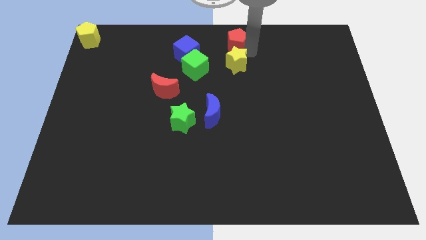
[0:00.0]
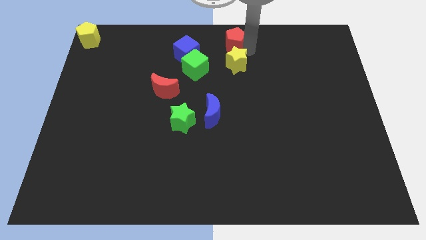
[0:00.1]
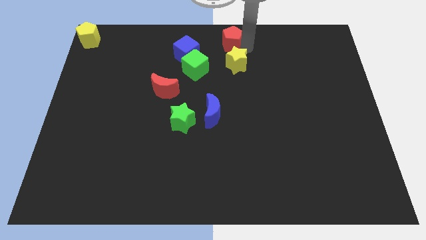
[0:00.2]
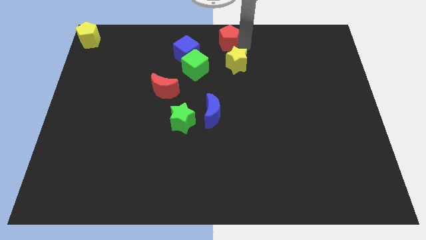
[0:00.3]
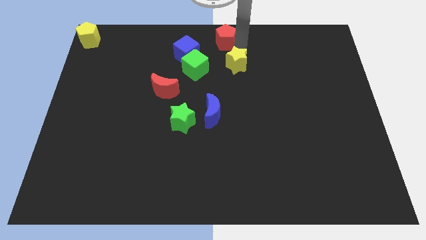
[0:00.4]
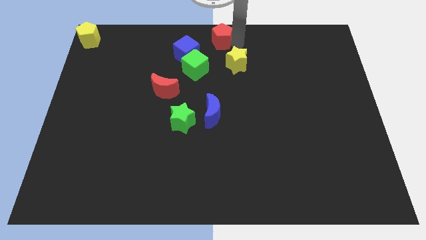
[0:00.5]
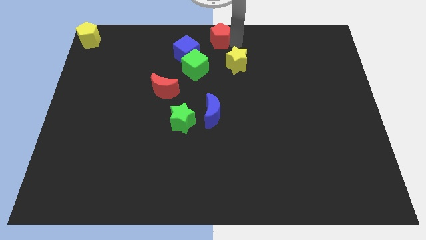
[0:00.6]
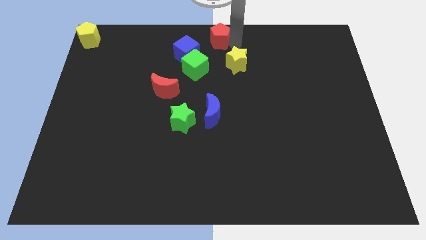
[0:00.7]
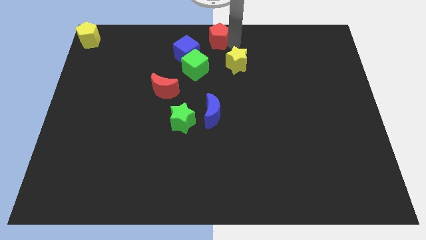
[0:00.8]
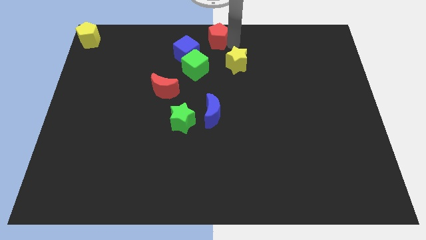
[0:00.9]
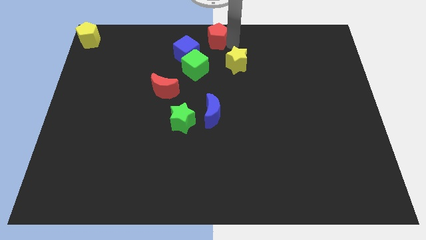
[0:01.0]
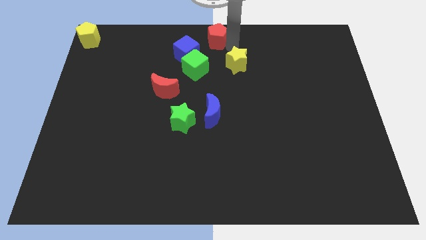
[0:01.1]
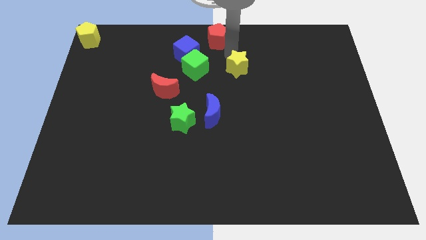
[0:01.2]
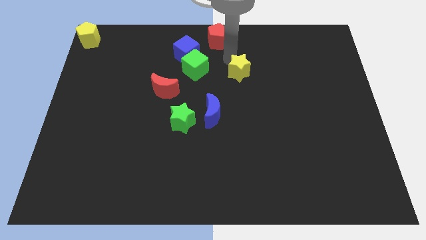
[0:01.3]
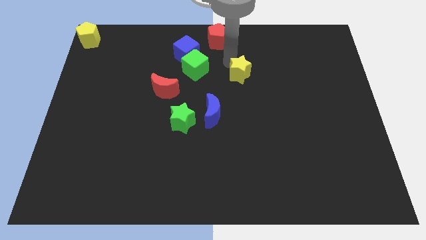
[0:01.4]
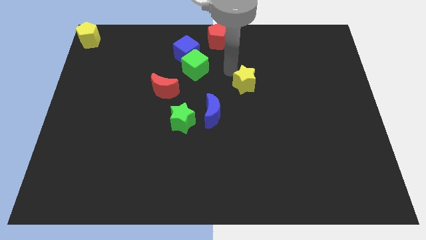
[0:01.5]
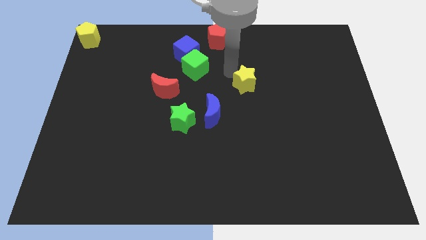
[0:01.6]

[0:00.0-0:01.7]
move the red pentagon to the top center

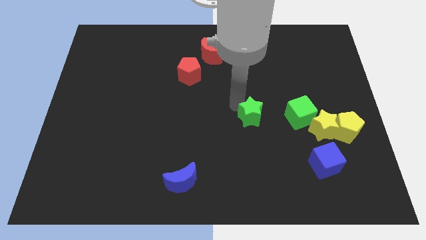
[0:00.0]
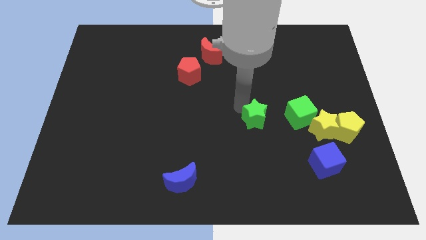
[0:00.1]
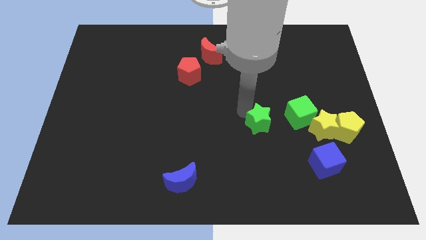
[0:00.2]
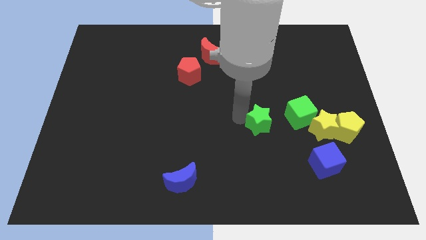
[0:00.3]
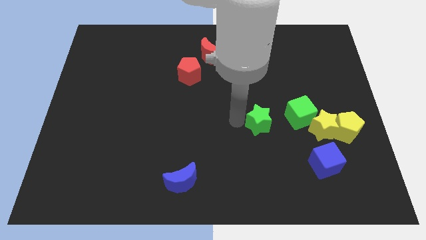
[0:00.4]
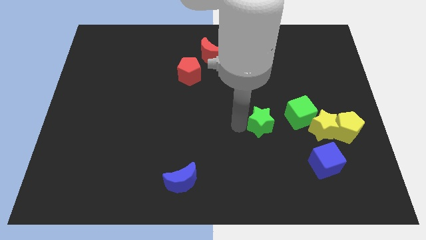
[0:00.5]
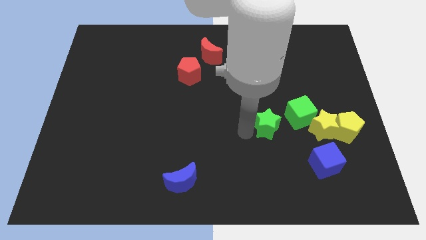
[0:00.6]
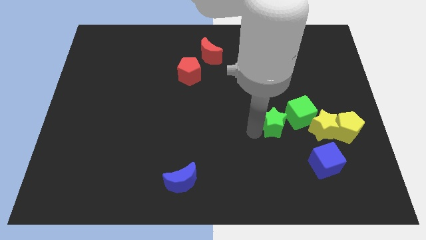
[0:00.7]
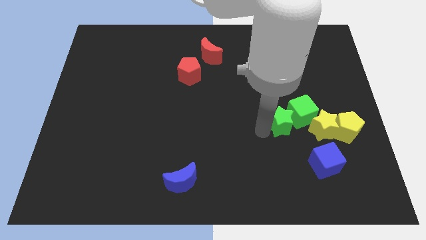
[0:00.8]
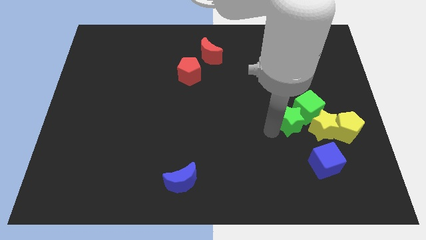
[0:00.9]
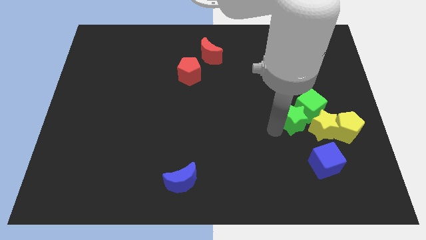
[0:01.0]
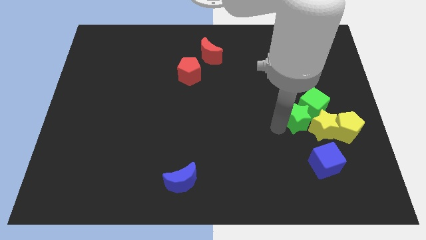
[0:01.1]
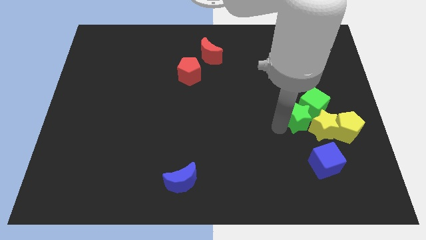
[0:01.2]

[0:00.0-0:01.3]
move green star into the green cube

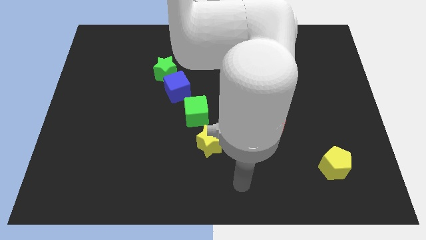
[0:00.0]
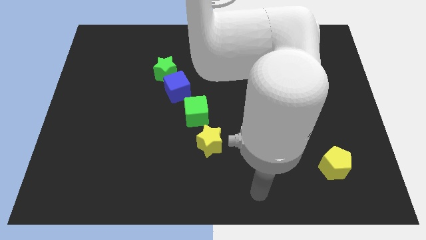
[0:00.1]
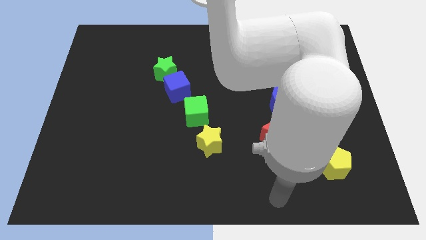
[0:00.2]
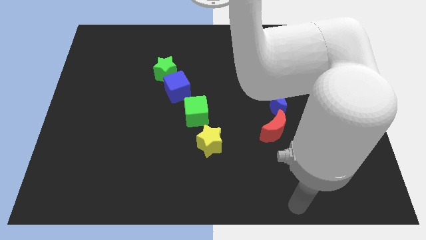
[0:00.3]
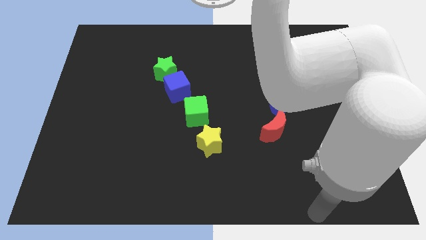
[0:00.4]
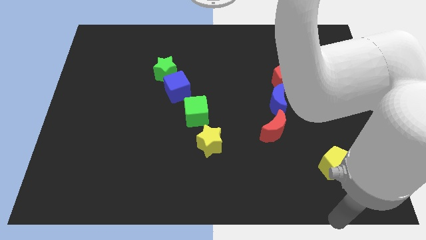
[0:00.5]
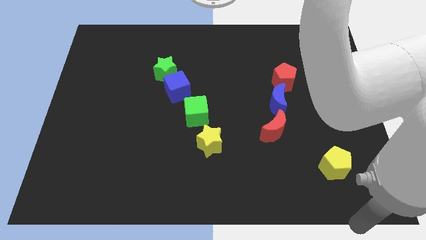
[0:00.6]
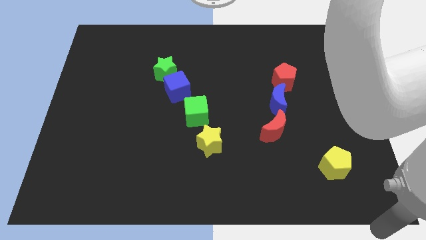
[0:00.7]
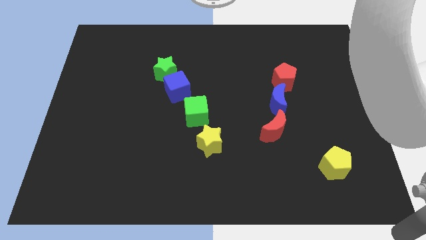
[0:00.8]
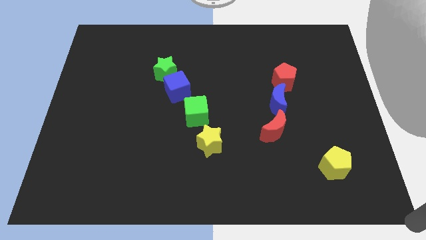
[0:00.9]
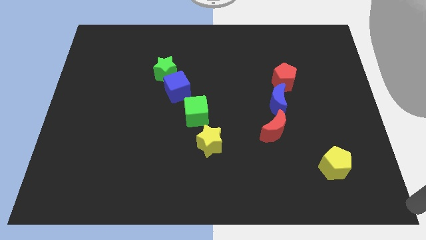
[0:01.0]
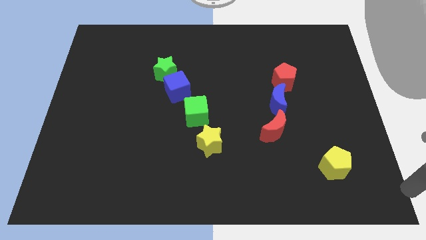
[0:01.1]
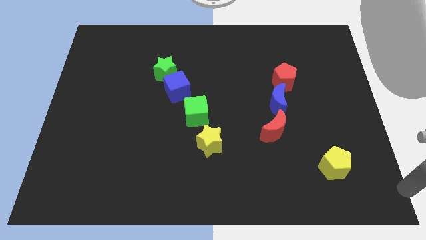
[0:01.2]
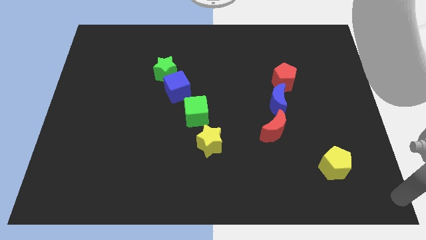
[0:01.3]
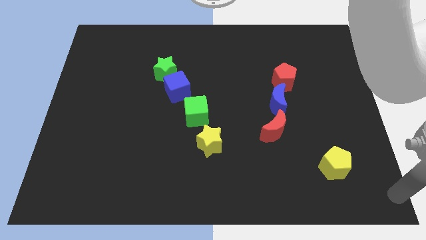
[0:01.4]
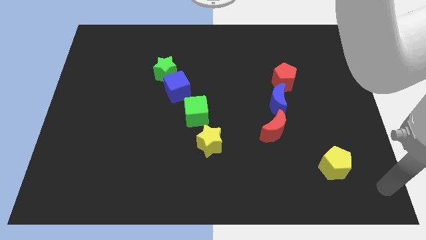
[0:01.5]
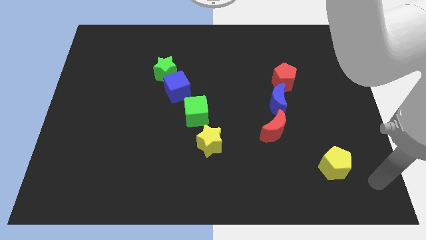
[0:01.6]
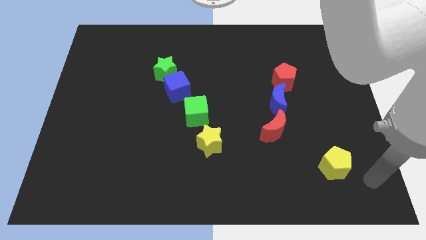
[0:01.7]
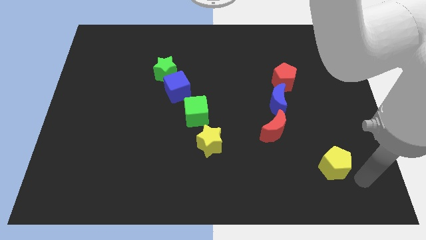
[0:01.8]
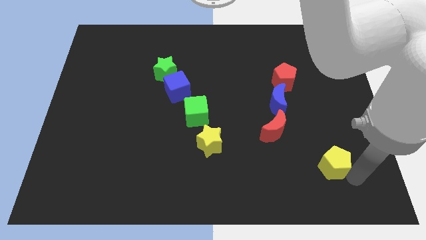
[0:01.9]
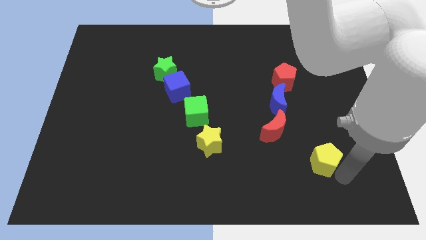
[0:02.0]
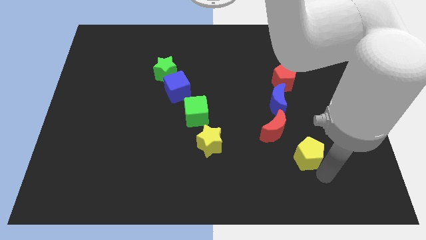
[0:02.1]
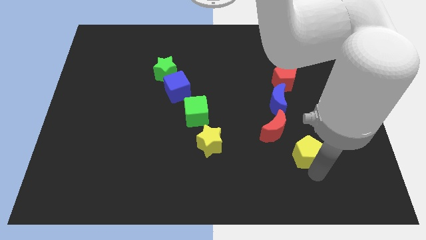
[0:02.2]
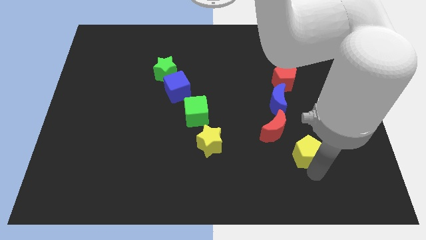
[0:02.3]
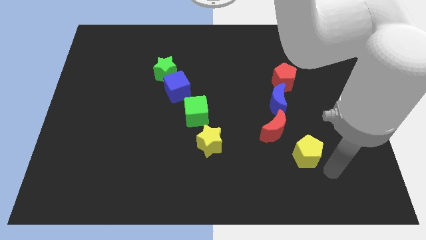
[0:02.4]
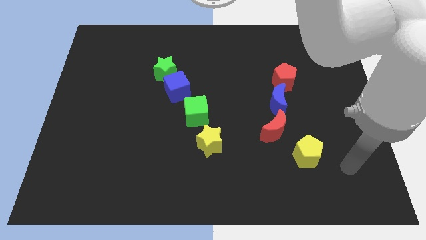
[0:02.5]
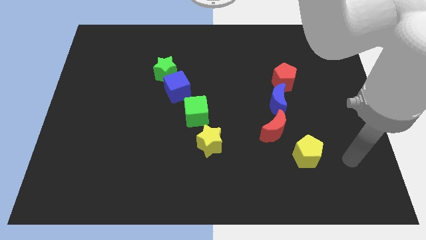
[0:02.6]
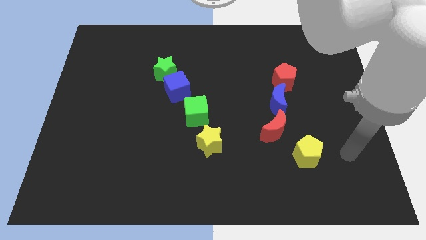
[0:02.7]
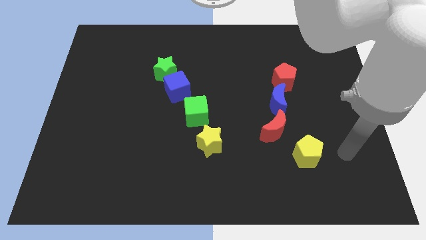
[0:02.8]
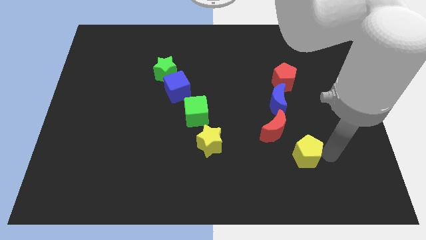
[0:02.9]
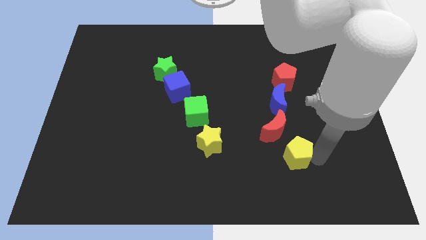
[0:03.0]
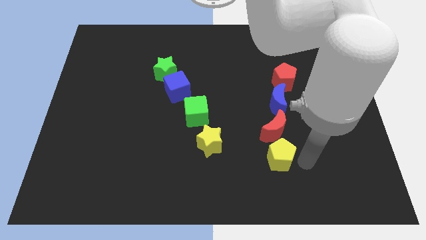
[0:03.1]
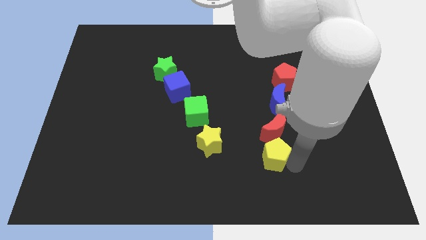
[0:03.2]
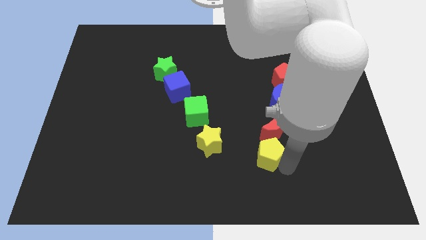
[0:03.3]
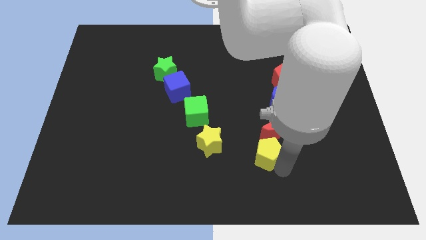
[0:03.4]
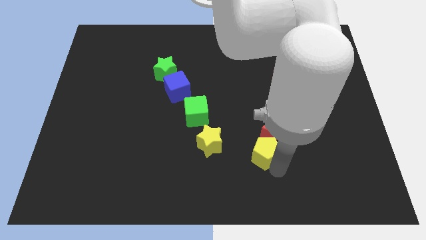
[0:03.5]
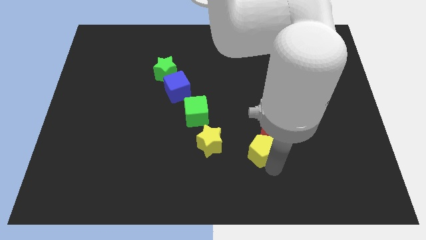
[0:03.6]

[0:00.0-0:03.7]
place yellow pentagon to the bottom of red moon

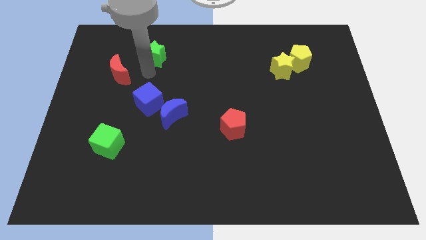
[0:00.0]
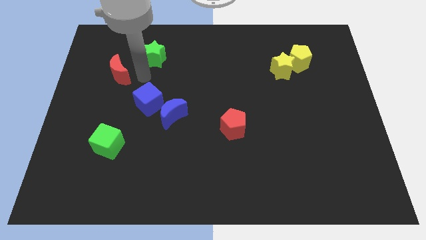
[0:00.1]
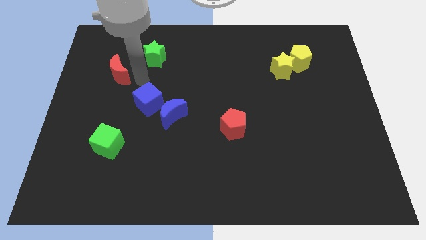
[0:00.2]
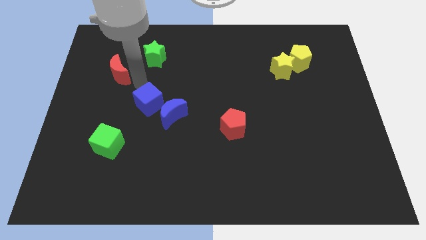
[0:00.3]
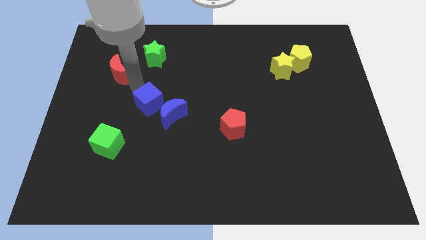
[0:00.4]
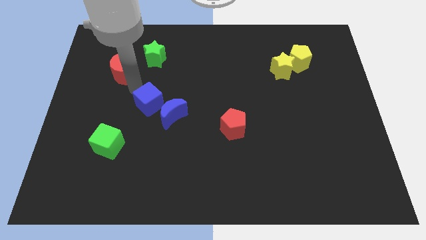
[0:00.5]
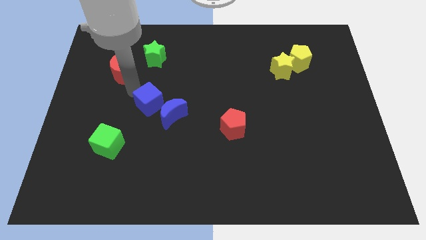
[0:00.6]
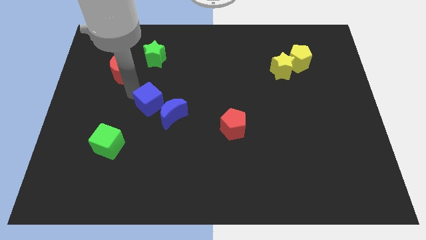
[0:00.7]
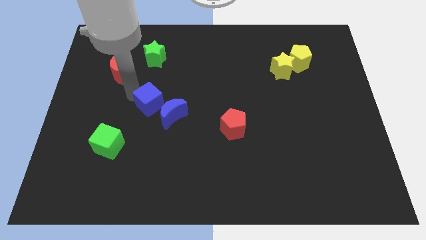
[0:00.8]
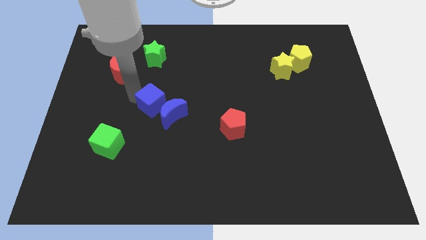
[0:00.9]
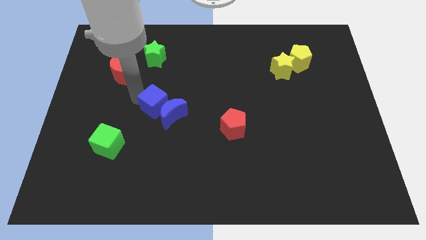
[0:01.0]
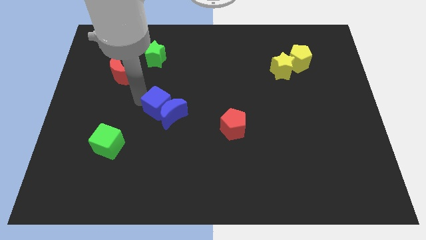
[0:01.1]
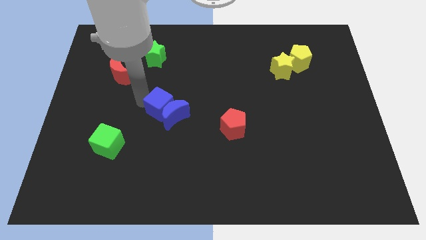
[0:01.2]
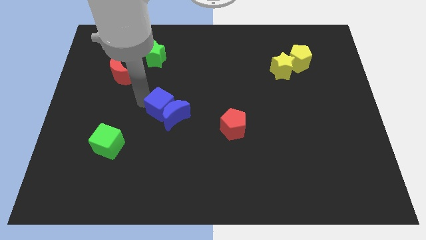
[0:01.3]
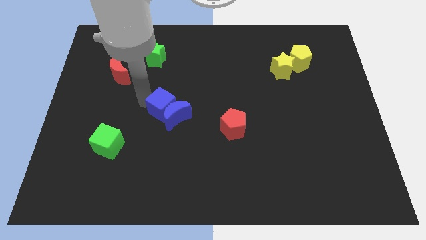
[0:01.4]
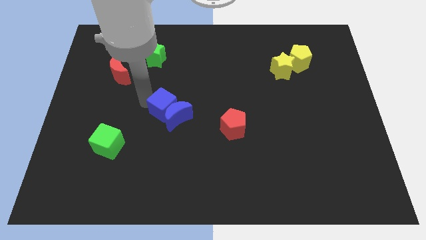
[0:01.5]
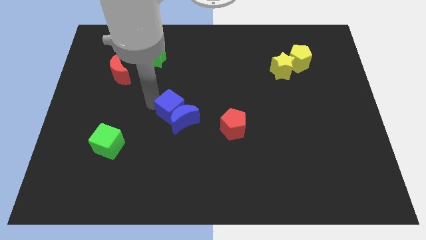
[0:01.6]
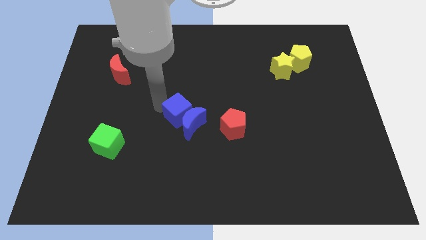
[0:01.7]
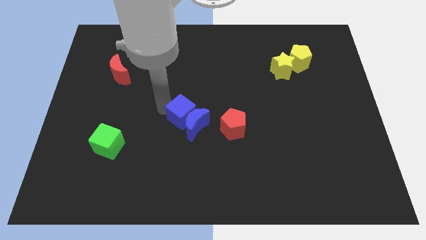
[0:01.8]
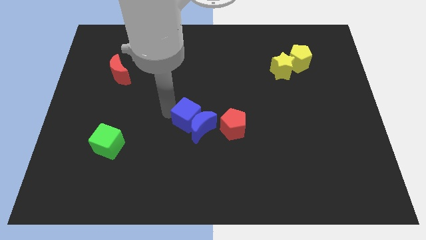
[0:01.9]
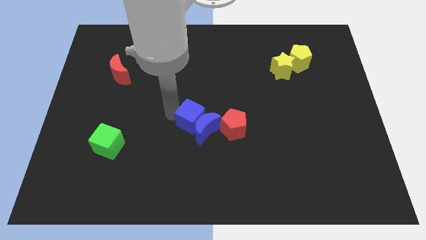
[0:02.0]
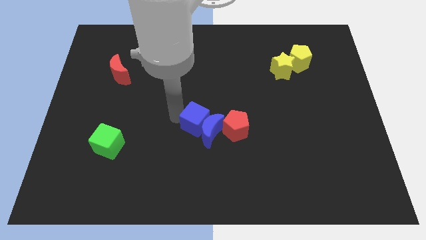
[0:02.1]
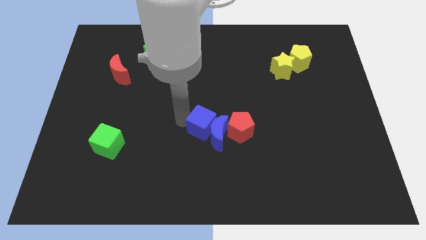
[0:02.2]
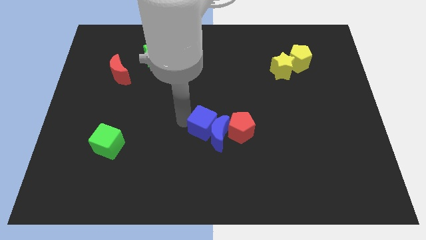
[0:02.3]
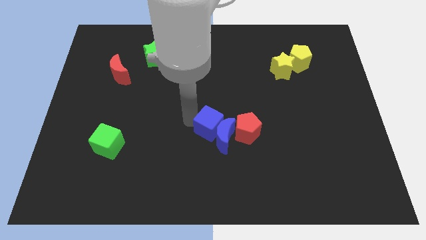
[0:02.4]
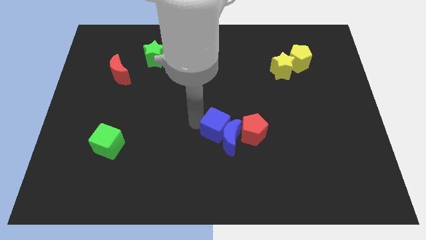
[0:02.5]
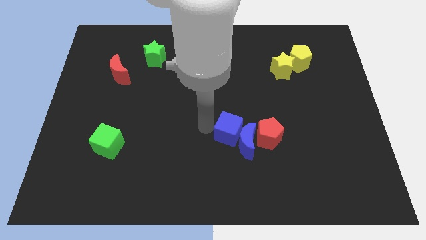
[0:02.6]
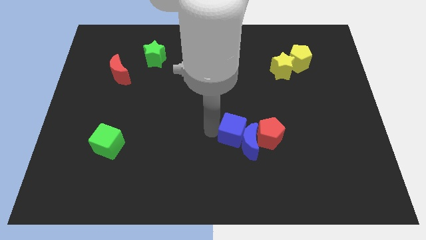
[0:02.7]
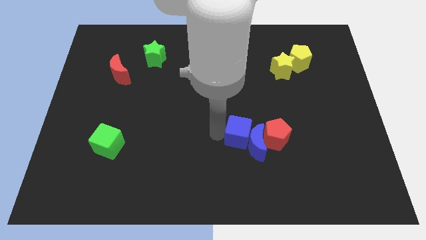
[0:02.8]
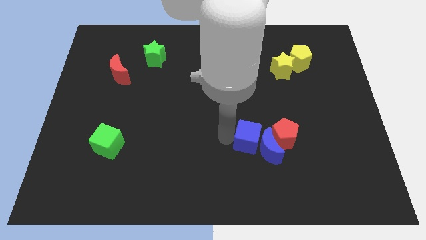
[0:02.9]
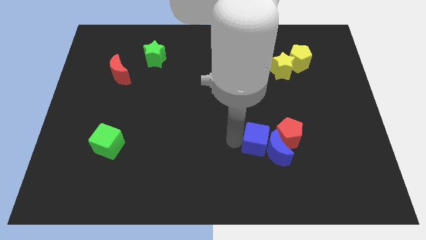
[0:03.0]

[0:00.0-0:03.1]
push the blue blocks and red pentagon to the right side of the table
